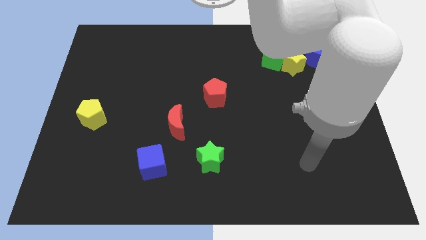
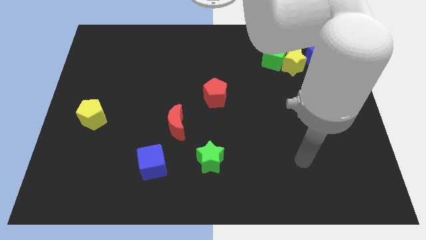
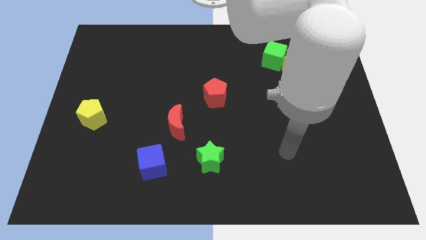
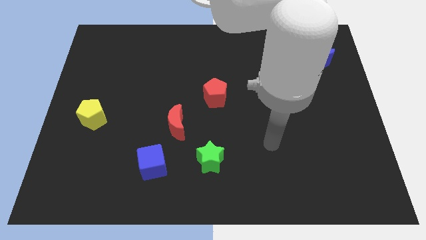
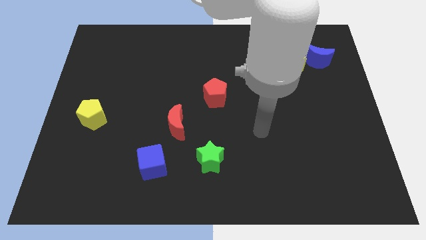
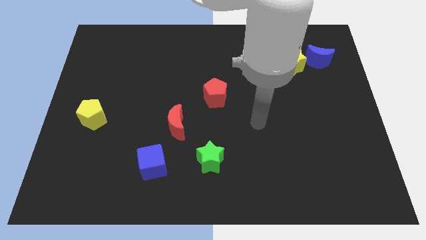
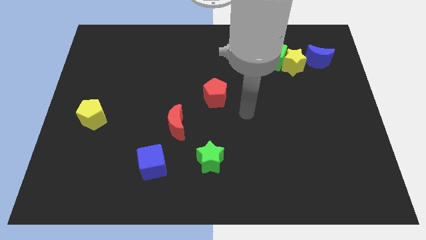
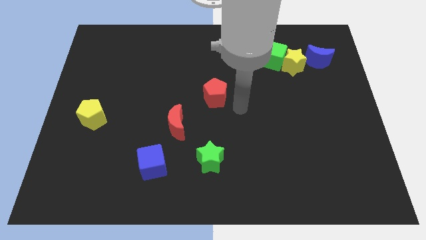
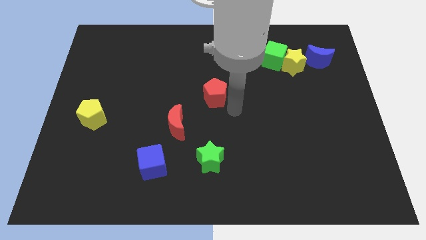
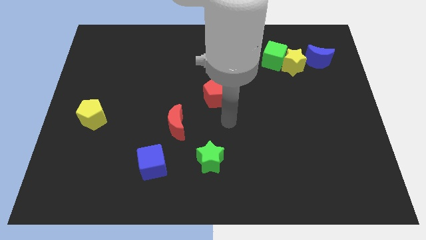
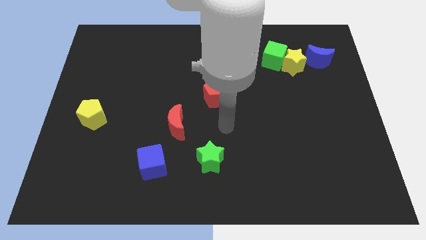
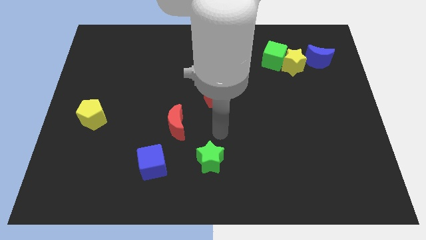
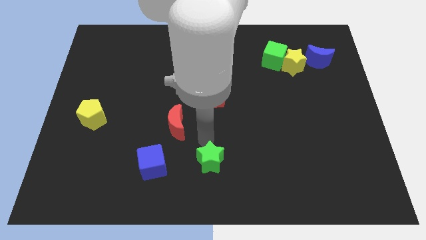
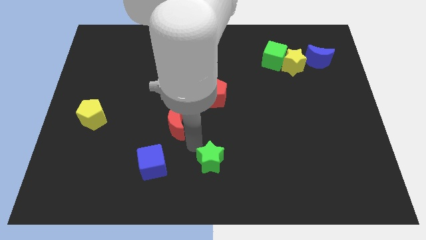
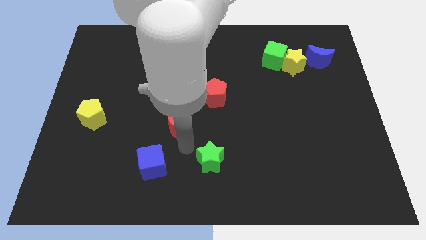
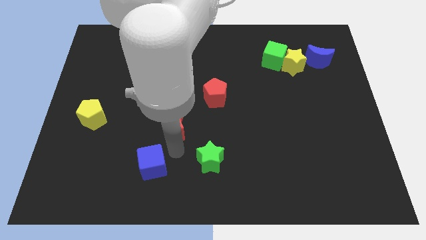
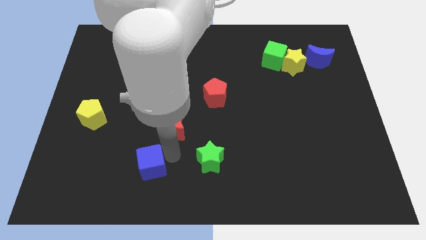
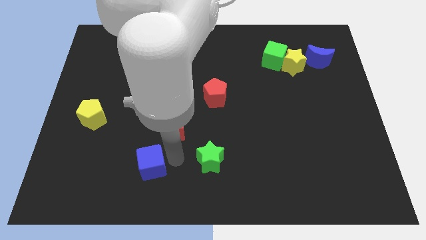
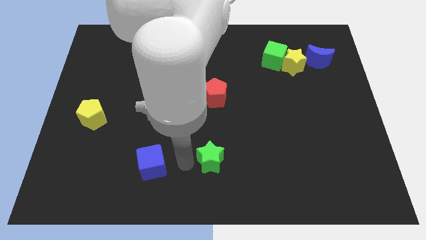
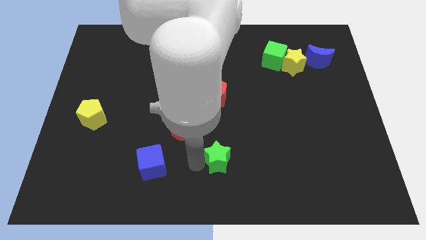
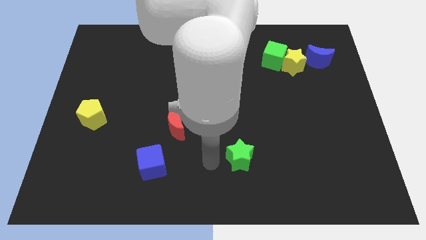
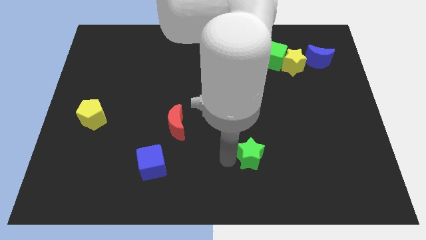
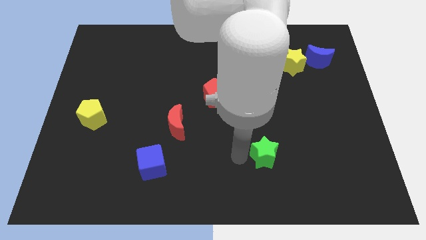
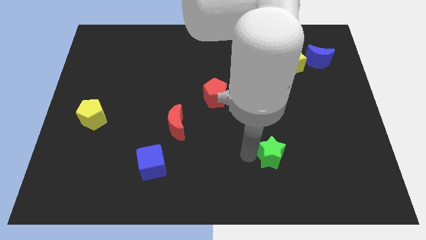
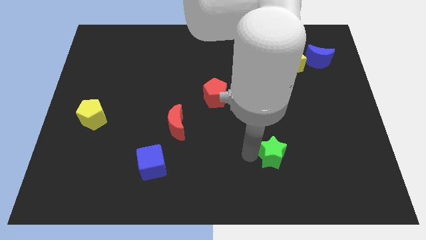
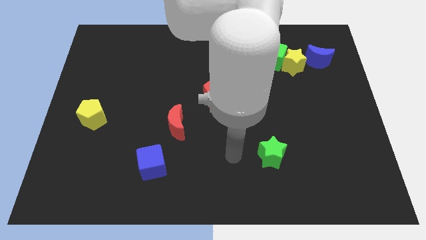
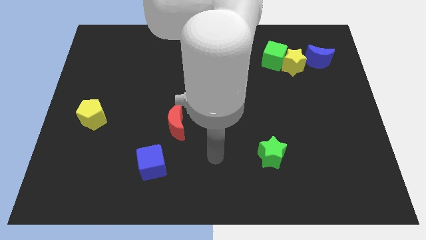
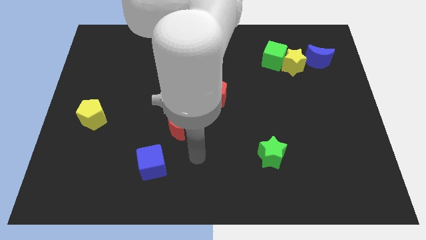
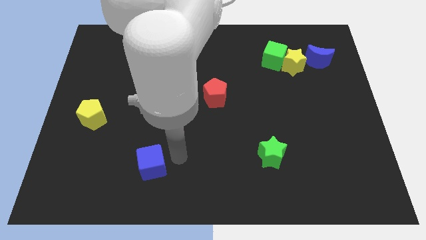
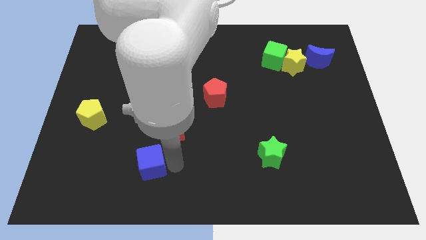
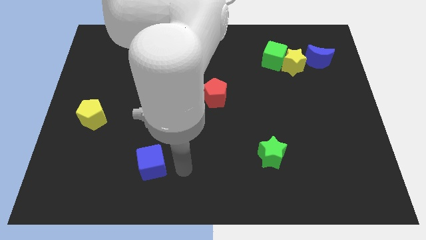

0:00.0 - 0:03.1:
push the green star towards the right side of the board

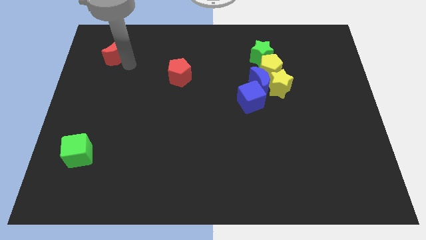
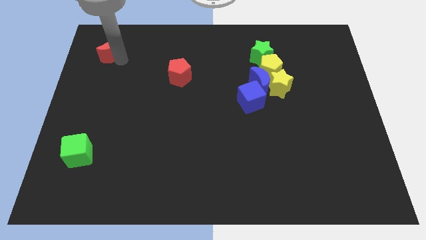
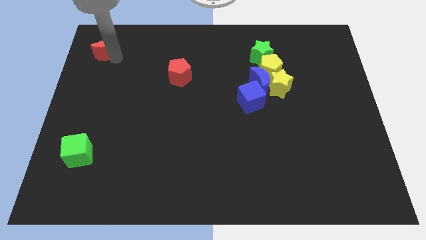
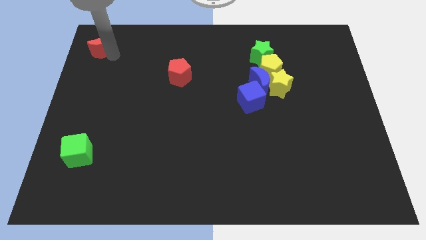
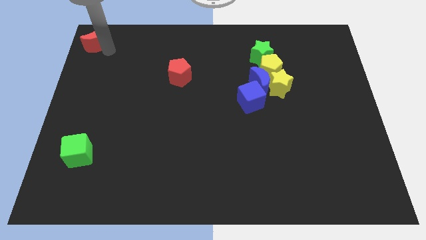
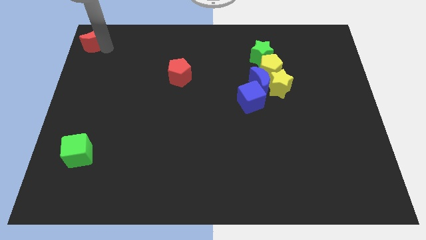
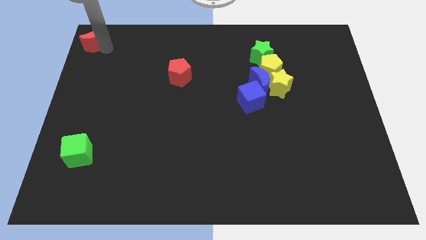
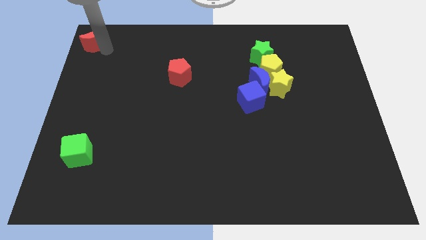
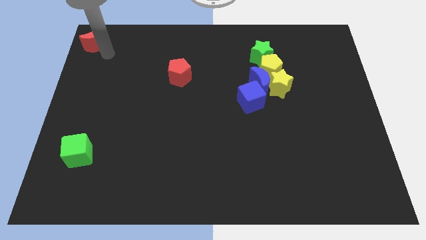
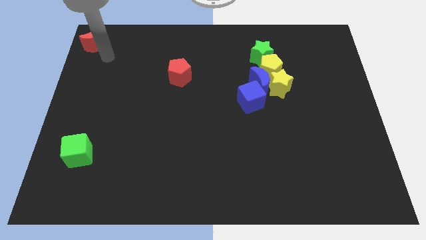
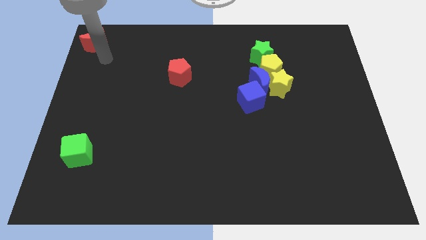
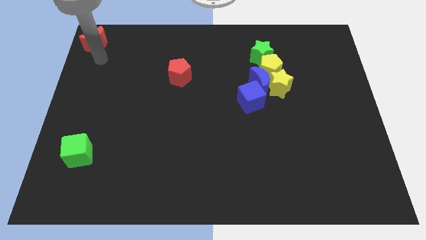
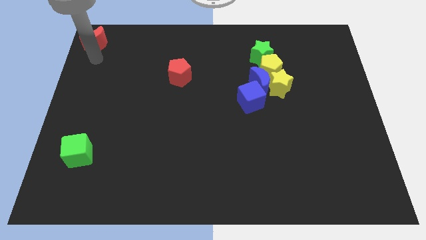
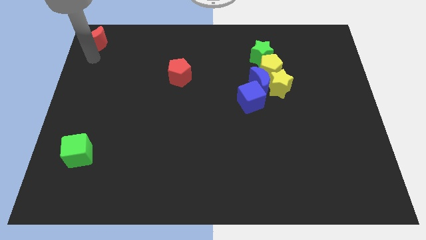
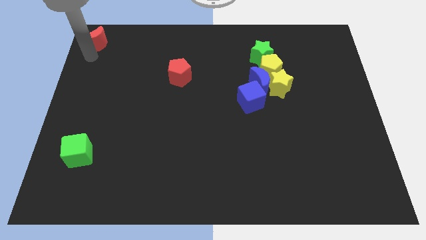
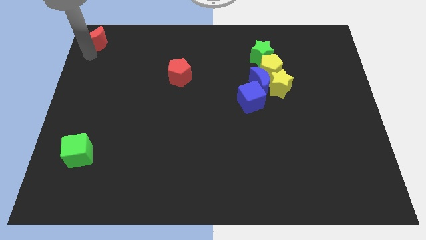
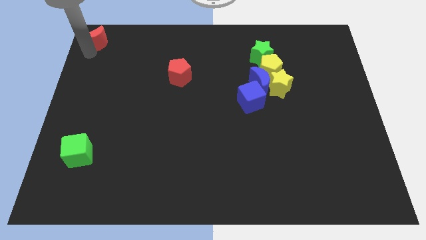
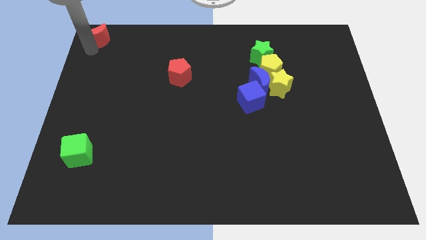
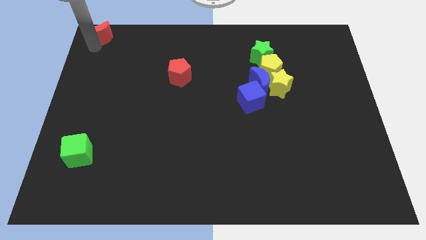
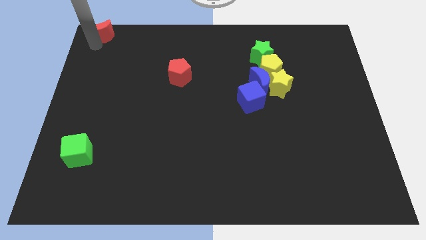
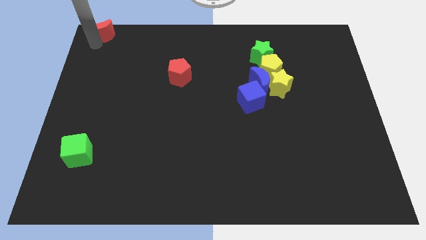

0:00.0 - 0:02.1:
move the red crescent to the top left side of the table

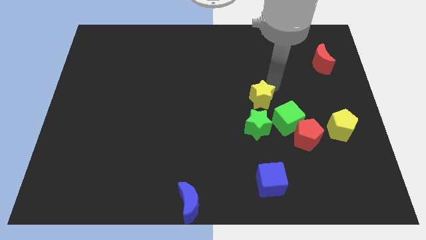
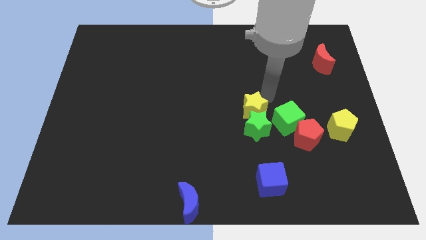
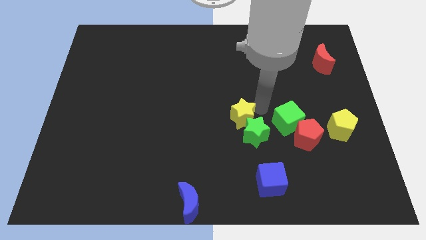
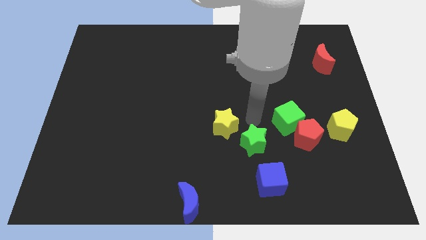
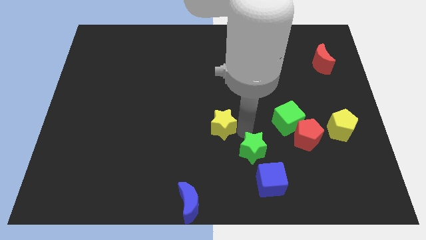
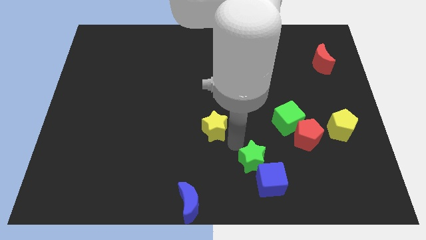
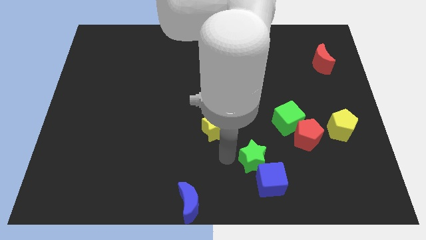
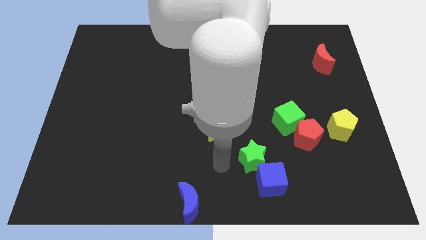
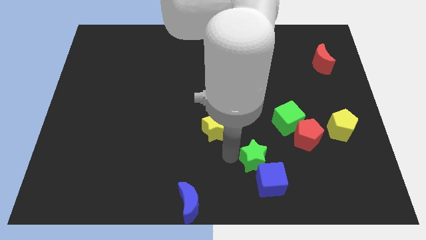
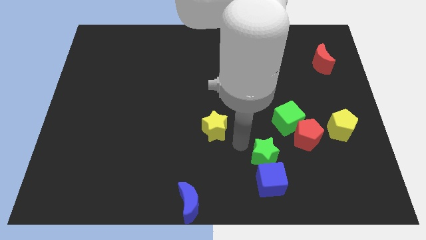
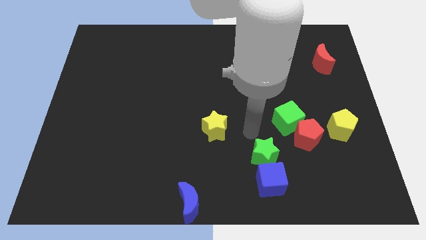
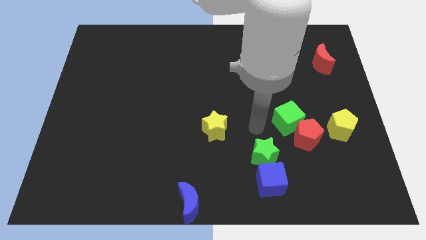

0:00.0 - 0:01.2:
separate the green and yellow stars apart

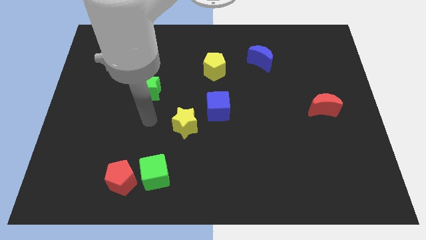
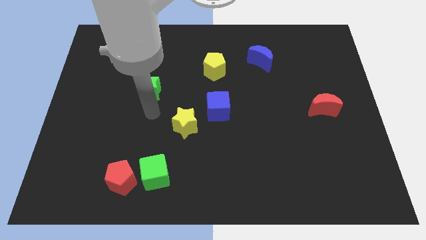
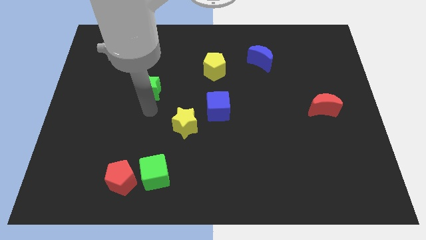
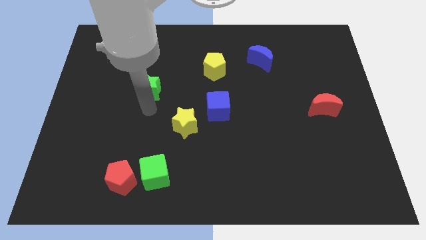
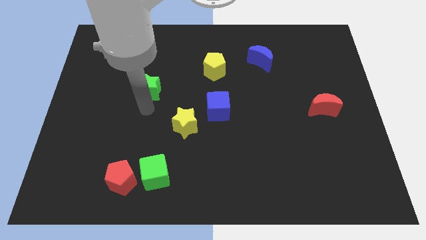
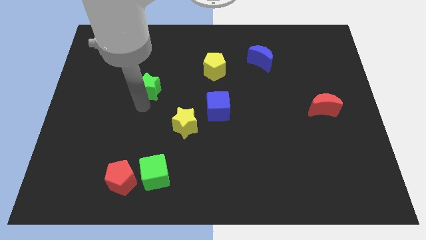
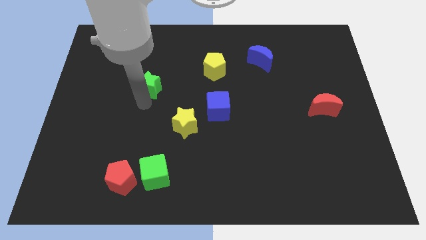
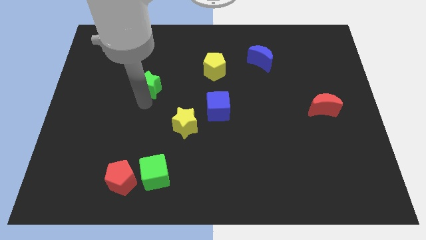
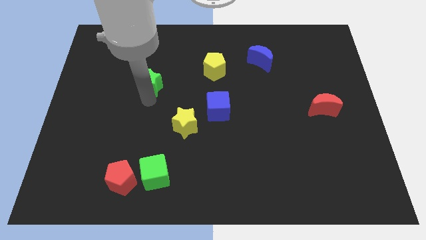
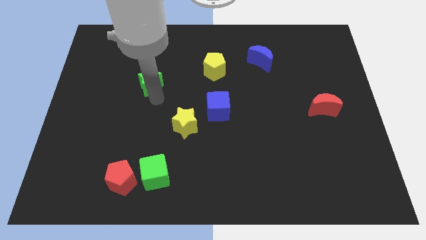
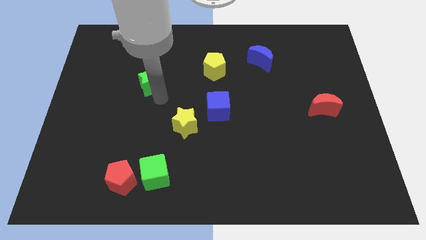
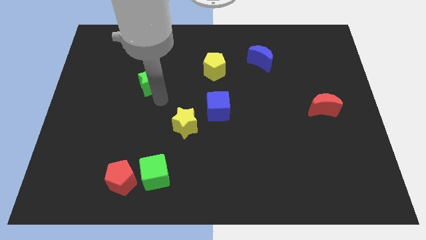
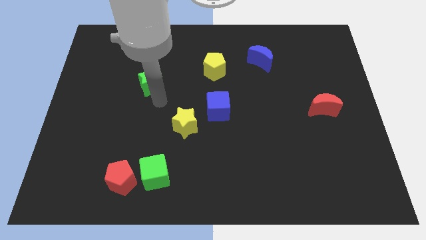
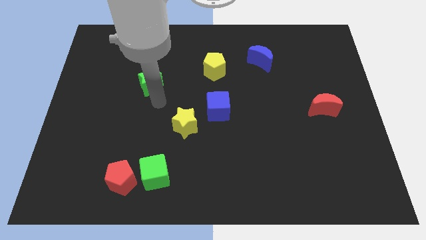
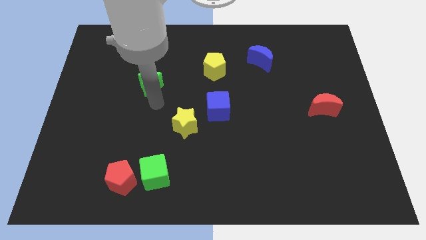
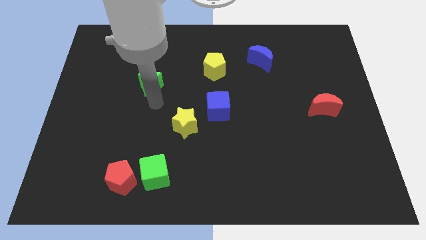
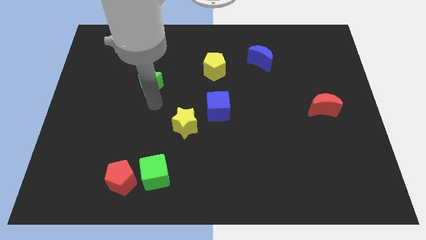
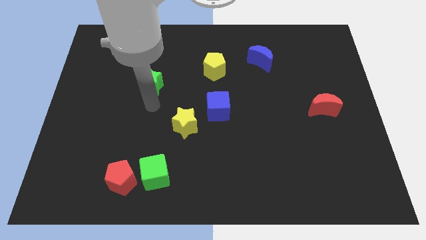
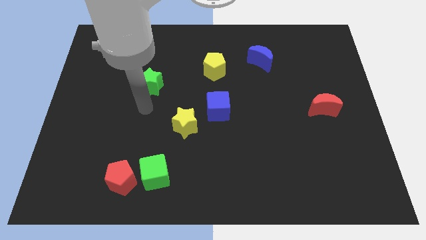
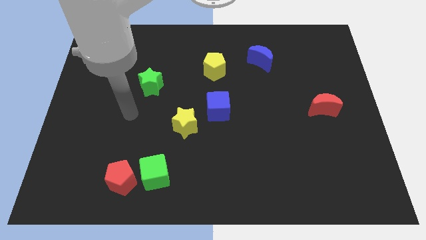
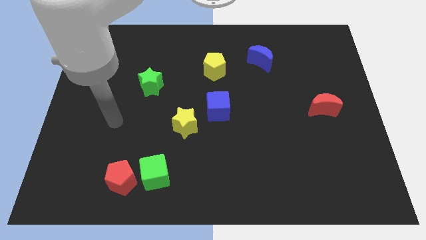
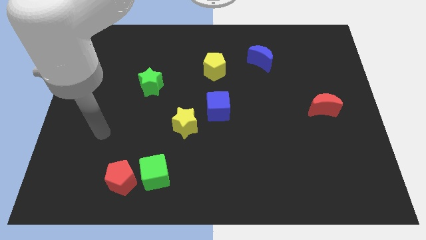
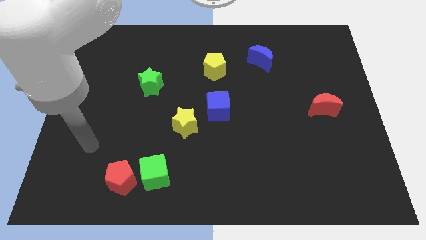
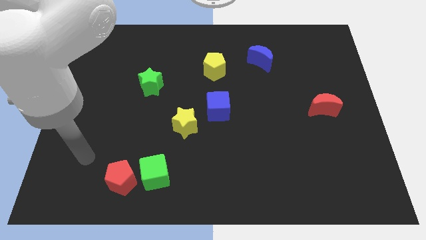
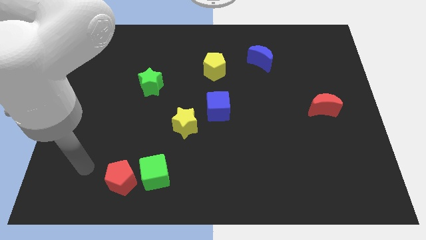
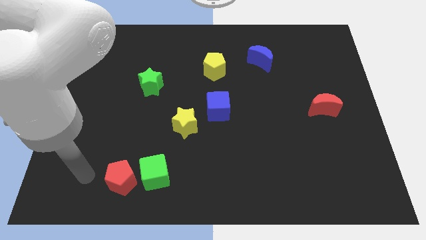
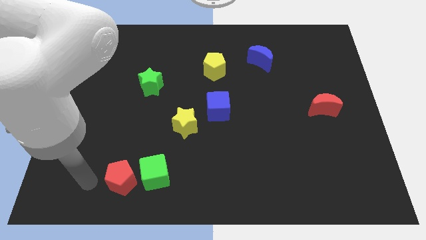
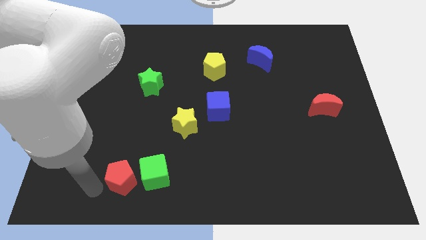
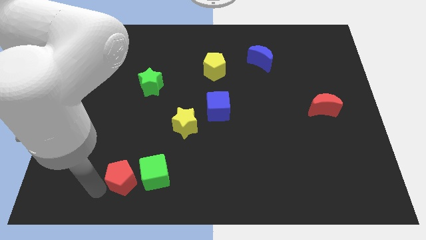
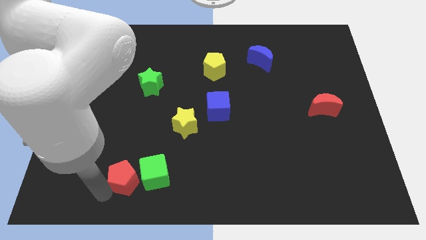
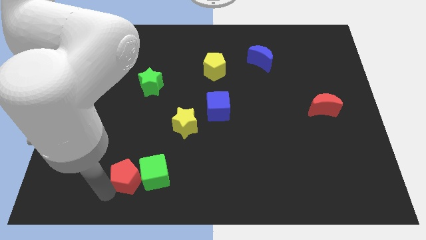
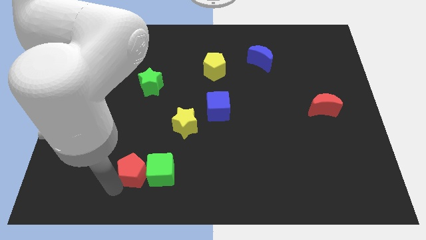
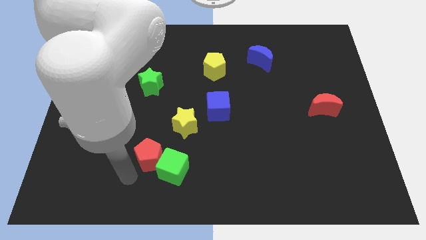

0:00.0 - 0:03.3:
push the green star and red pentagon vertical to each other
